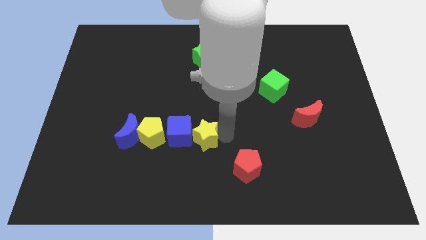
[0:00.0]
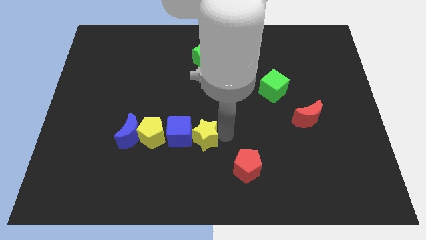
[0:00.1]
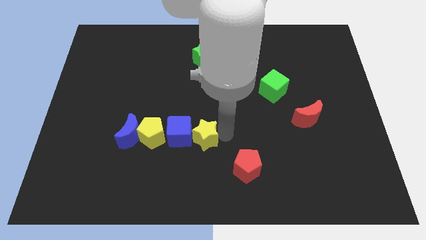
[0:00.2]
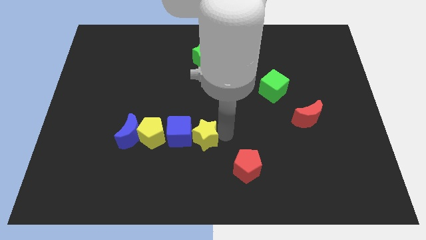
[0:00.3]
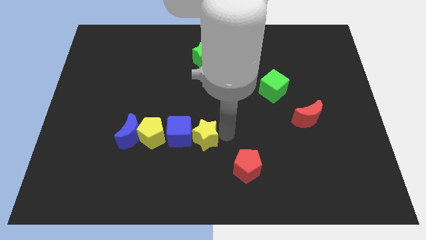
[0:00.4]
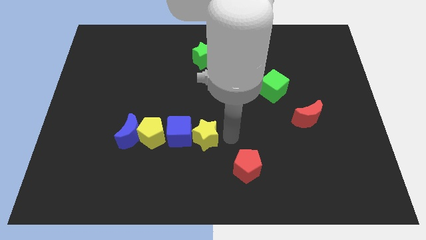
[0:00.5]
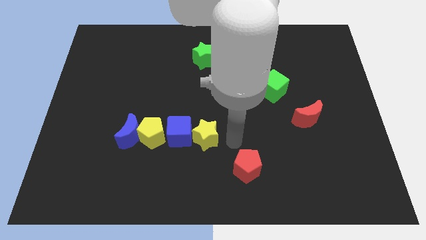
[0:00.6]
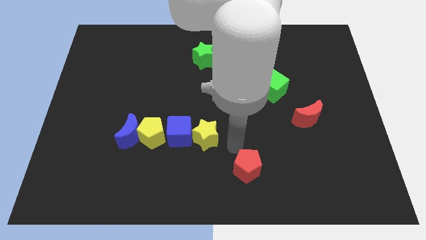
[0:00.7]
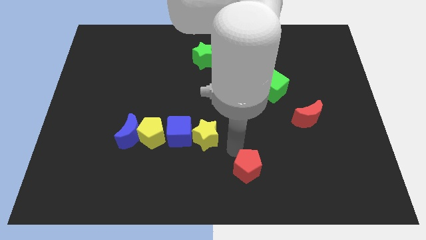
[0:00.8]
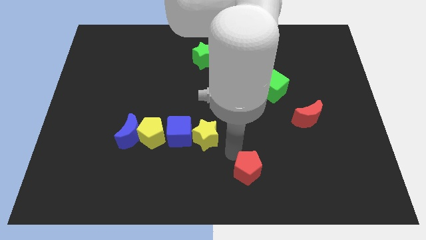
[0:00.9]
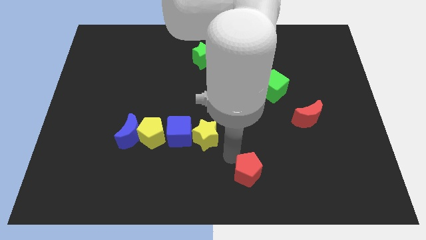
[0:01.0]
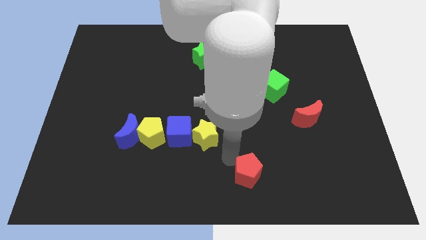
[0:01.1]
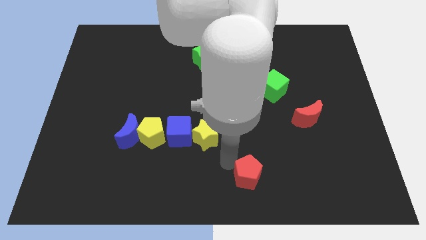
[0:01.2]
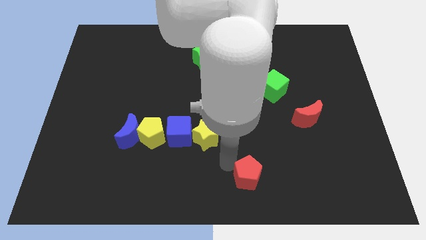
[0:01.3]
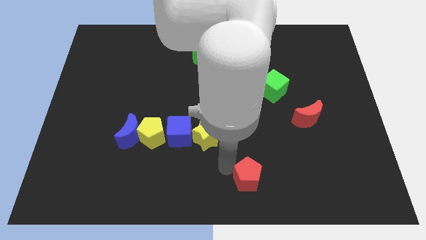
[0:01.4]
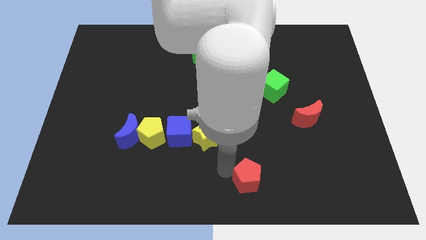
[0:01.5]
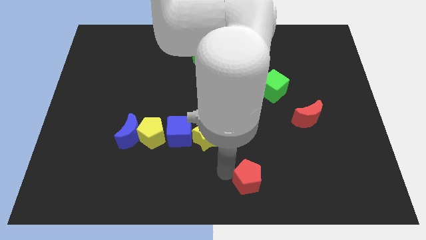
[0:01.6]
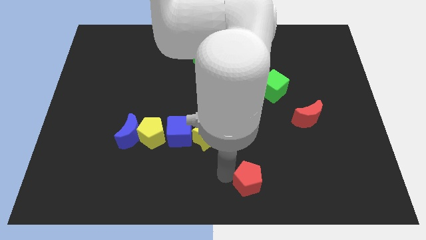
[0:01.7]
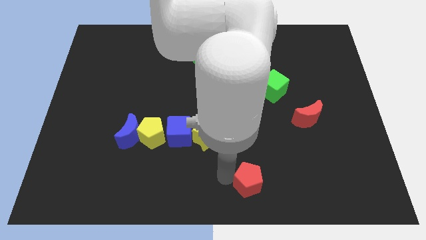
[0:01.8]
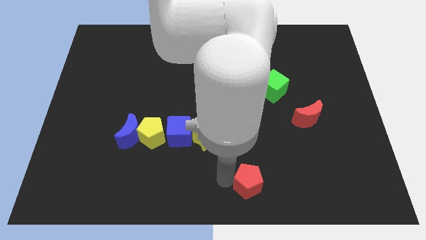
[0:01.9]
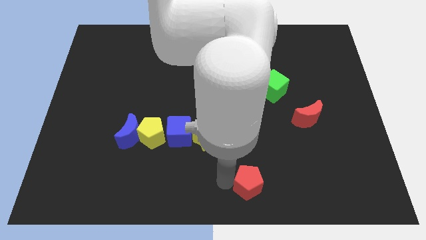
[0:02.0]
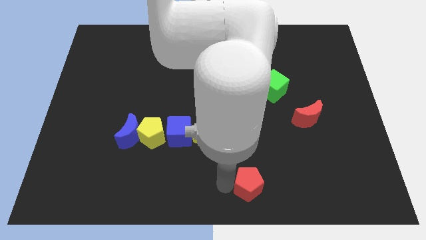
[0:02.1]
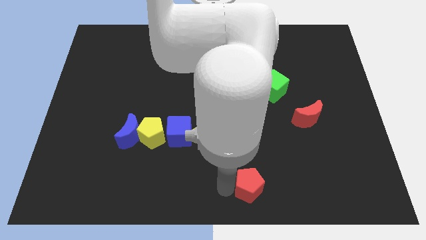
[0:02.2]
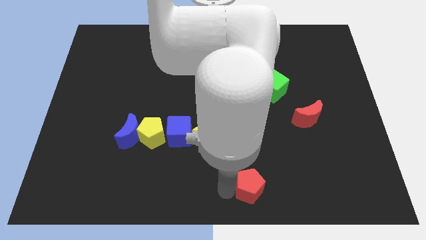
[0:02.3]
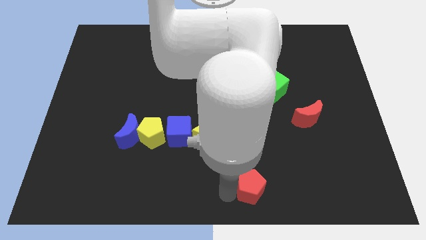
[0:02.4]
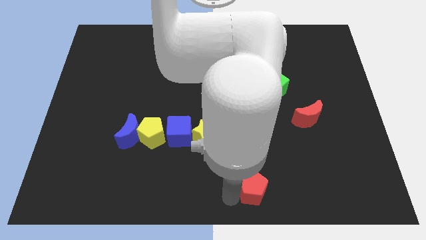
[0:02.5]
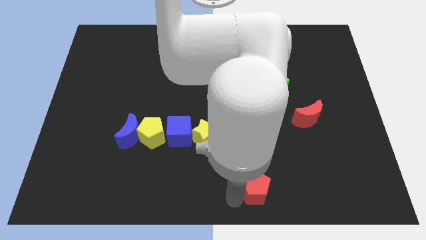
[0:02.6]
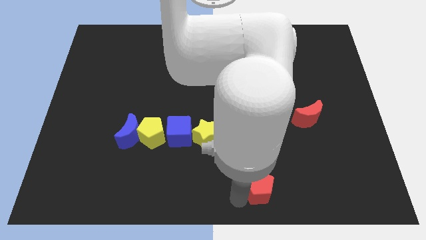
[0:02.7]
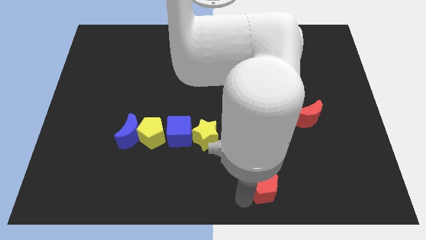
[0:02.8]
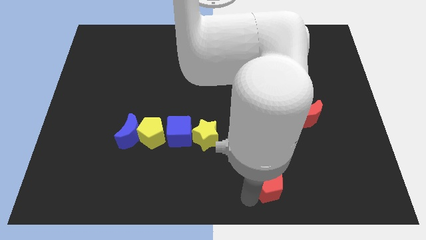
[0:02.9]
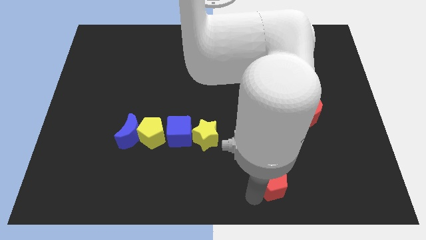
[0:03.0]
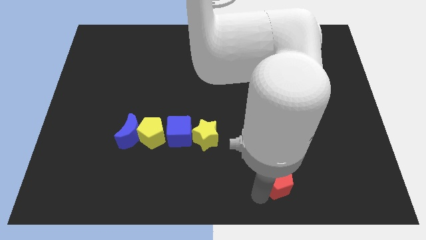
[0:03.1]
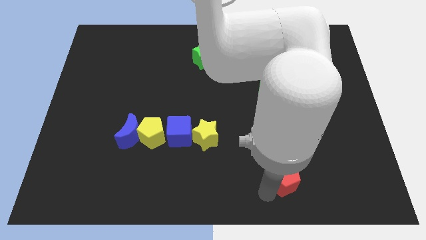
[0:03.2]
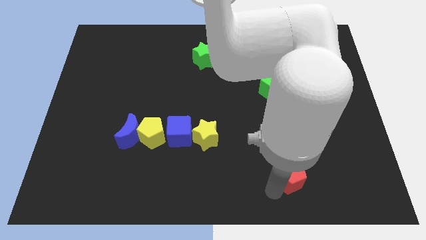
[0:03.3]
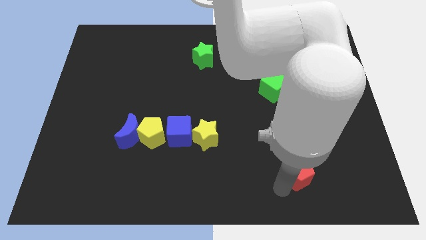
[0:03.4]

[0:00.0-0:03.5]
move red pentagon towards right

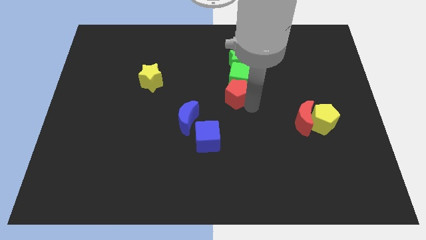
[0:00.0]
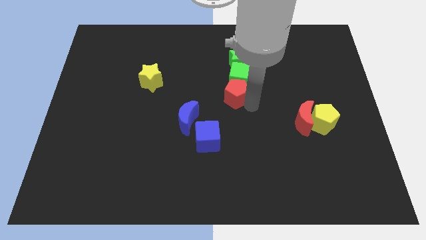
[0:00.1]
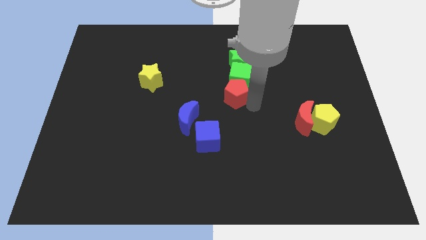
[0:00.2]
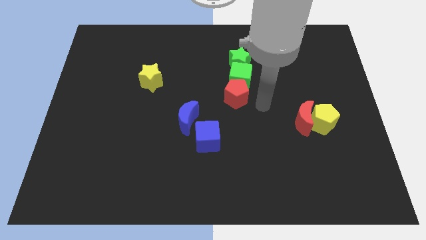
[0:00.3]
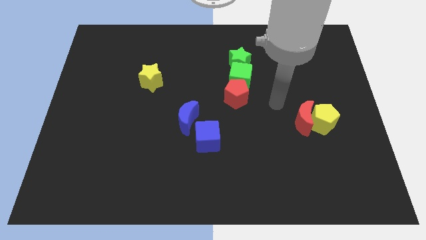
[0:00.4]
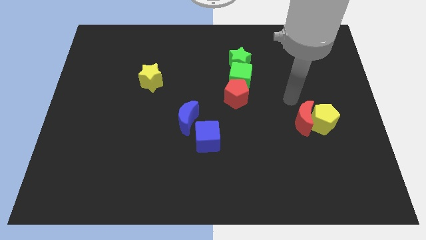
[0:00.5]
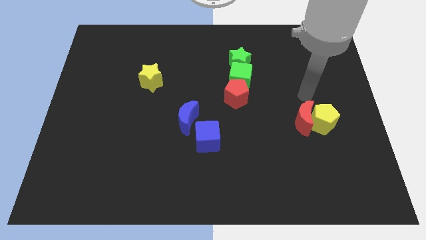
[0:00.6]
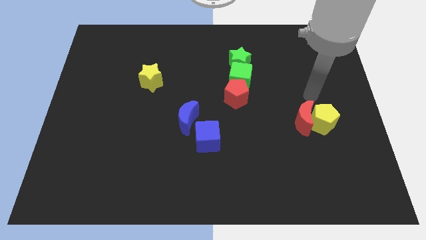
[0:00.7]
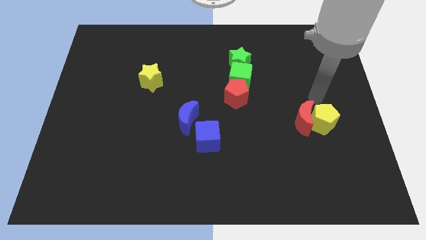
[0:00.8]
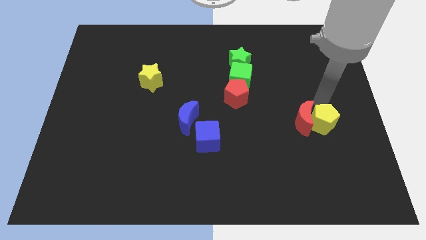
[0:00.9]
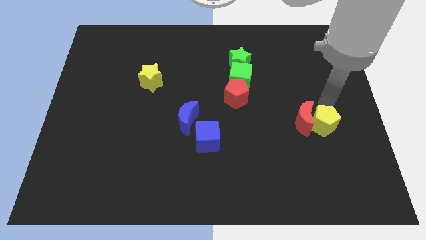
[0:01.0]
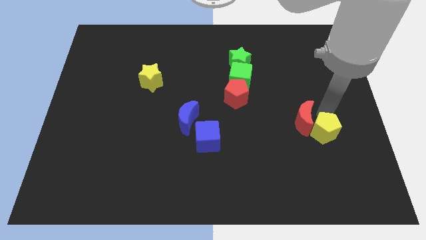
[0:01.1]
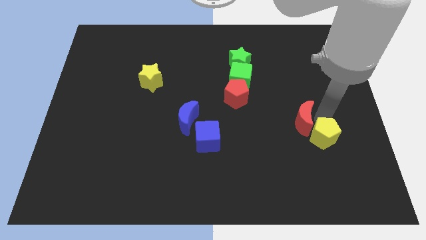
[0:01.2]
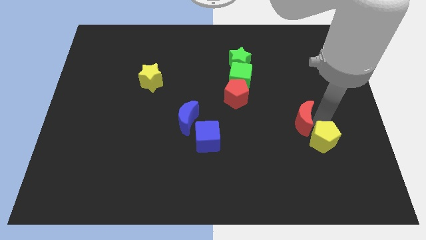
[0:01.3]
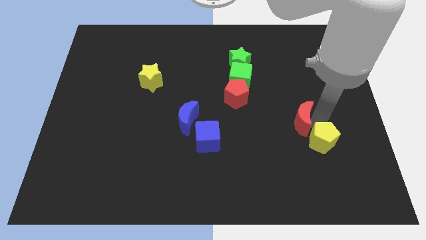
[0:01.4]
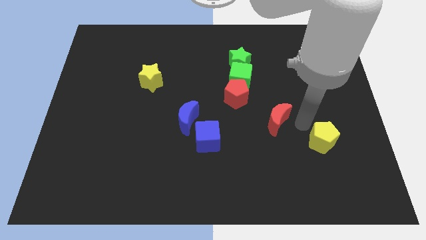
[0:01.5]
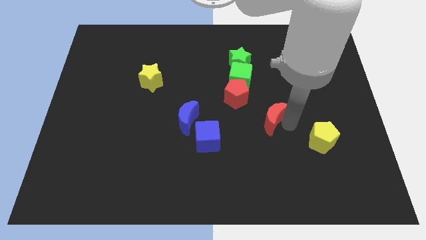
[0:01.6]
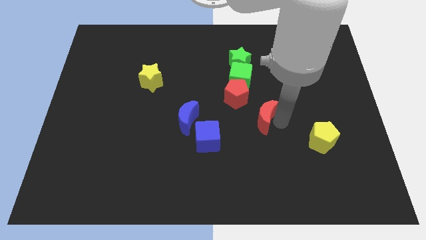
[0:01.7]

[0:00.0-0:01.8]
separate the red moon and yellow pentagon

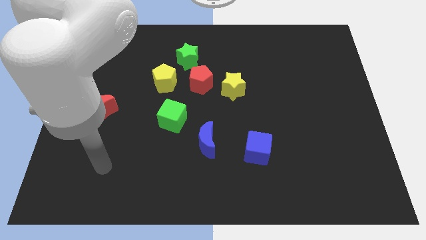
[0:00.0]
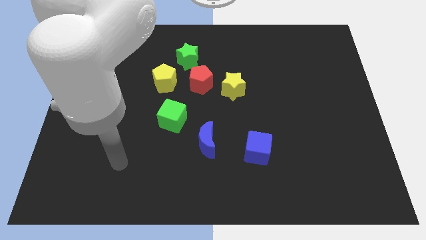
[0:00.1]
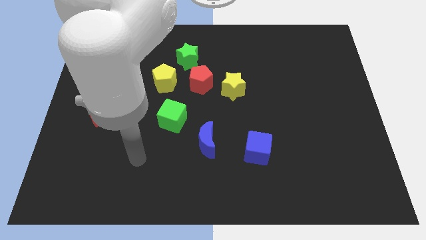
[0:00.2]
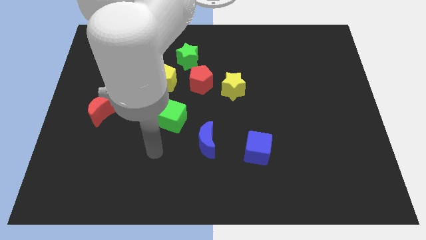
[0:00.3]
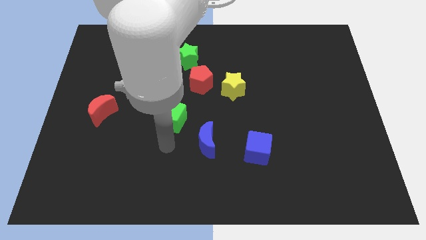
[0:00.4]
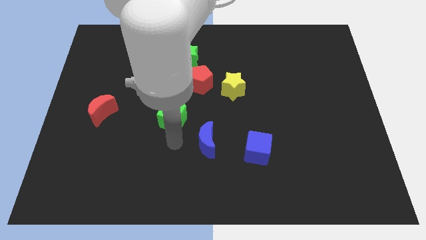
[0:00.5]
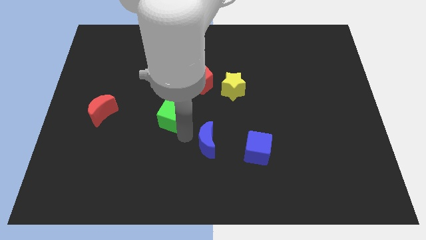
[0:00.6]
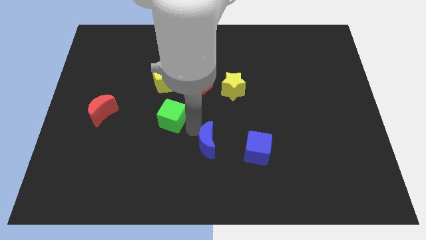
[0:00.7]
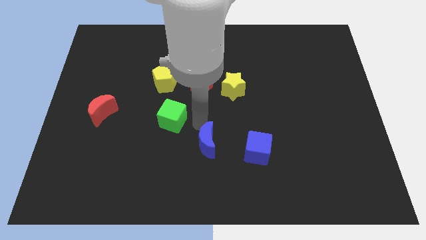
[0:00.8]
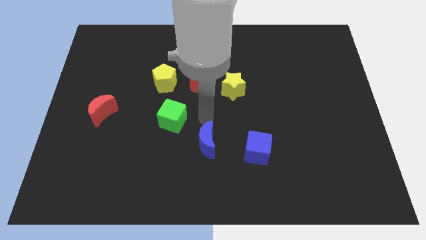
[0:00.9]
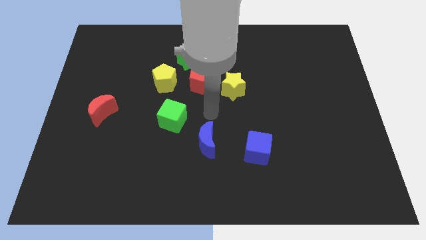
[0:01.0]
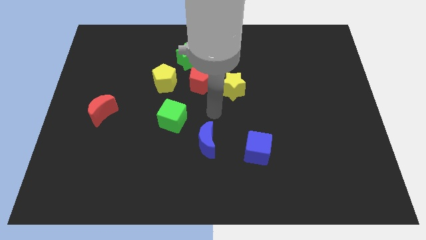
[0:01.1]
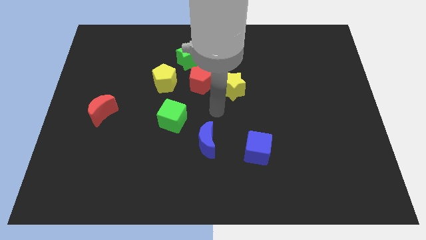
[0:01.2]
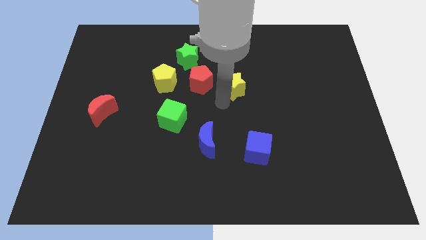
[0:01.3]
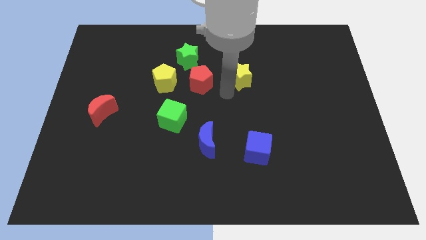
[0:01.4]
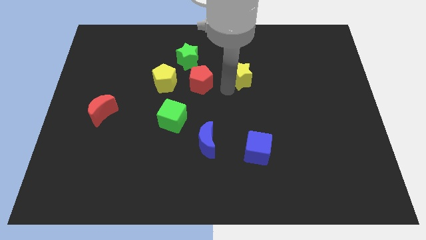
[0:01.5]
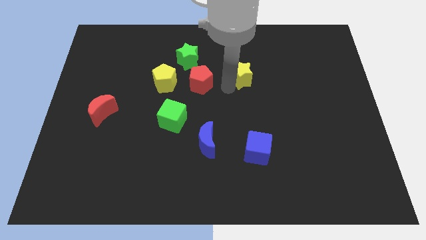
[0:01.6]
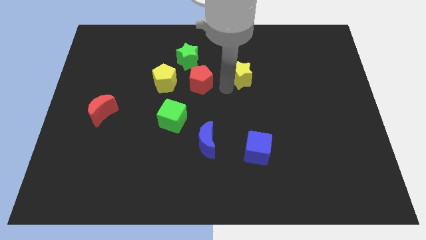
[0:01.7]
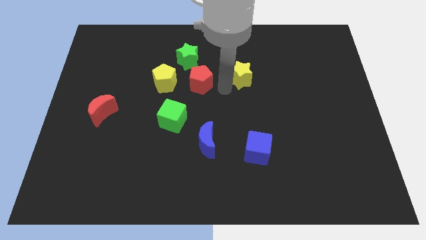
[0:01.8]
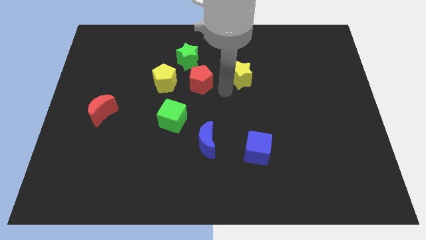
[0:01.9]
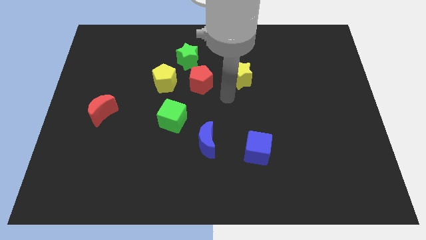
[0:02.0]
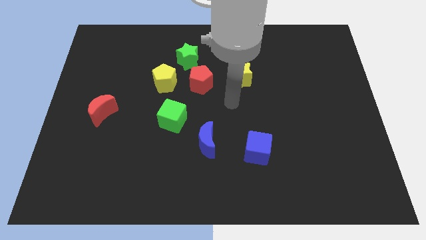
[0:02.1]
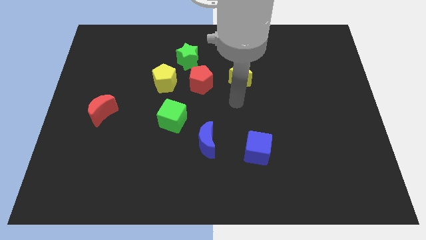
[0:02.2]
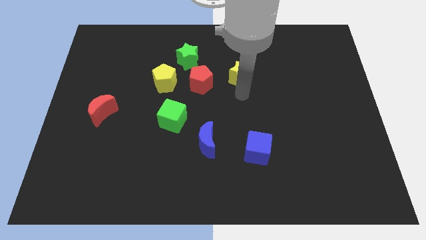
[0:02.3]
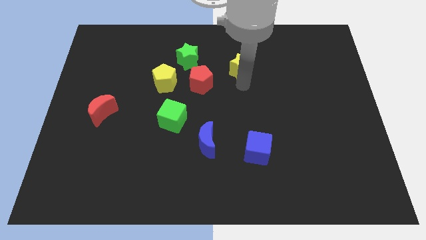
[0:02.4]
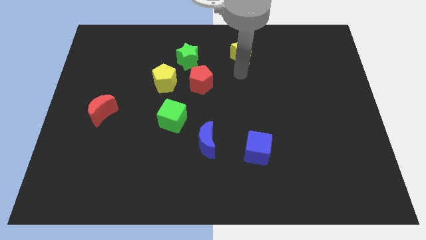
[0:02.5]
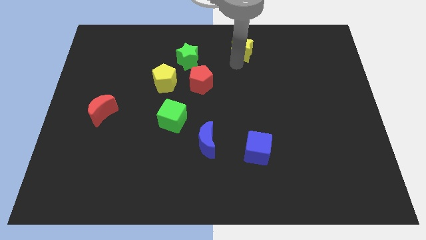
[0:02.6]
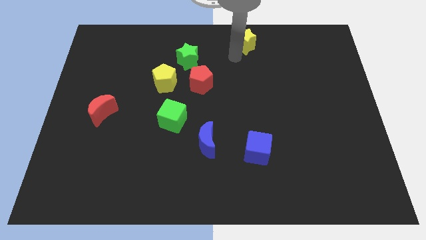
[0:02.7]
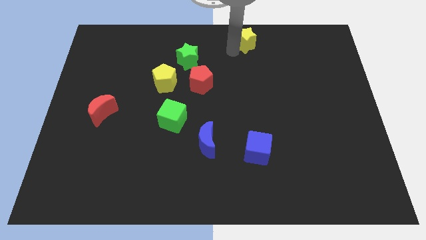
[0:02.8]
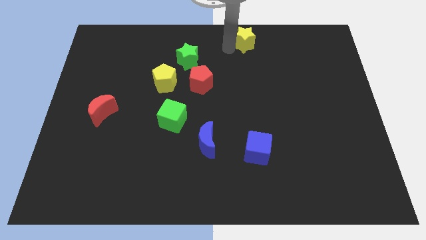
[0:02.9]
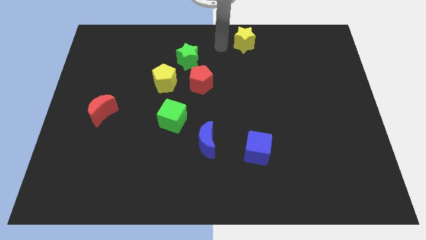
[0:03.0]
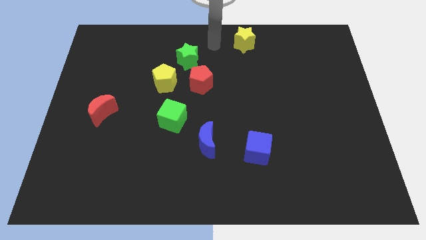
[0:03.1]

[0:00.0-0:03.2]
move yellow star to the top center of the board

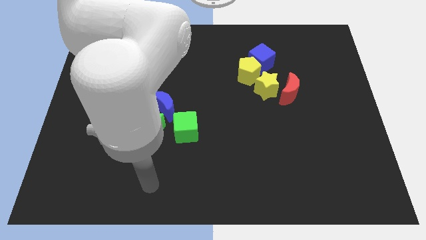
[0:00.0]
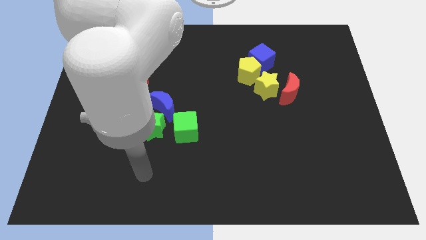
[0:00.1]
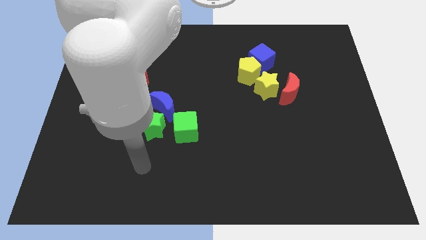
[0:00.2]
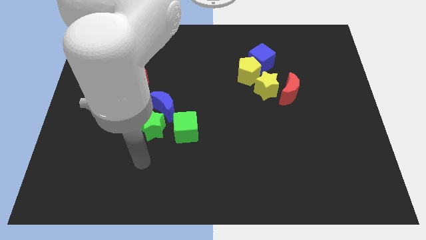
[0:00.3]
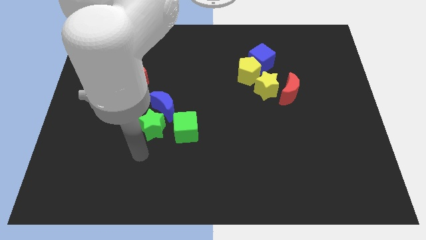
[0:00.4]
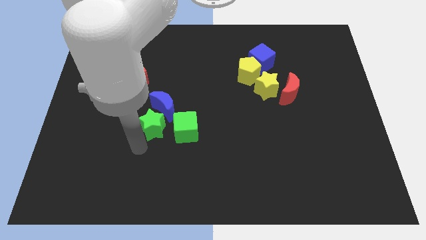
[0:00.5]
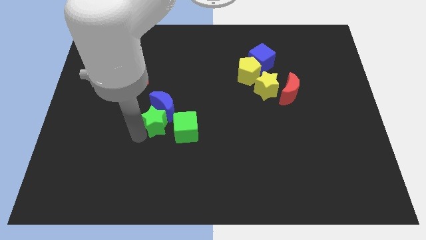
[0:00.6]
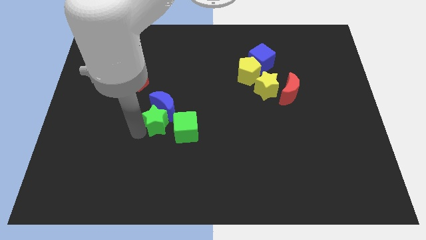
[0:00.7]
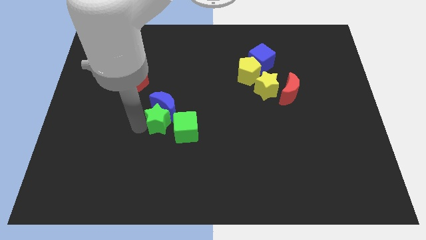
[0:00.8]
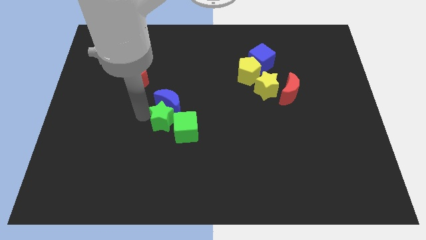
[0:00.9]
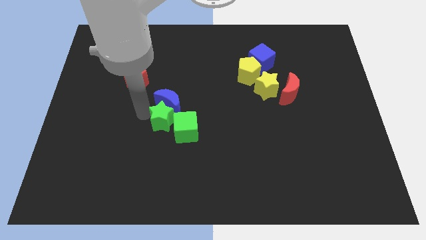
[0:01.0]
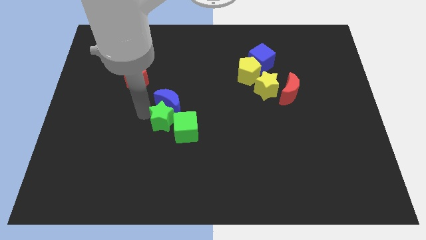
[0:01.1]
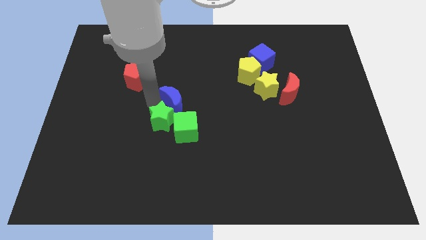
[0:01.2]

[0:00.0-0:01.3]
push the green star into blue moon
